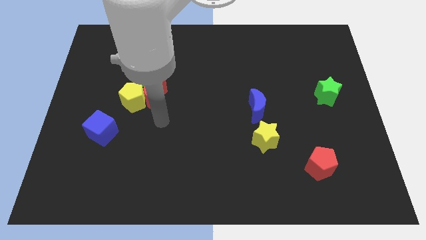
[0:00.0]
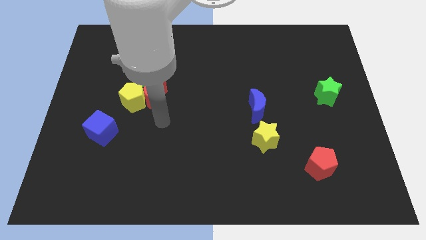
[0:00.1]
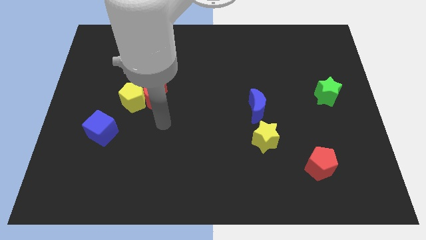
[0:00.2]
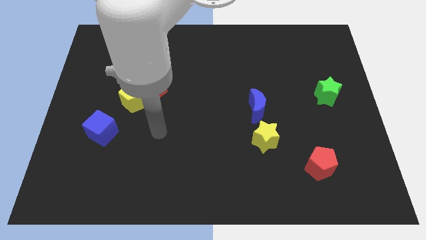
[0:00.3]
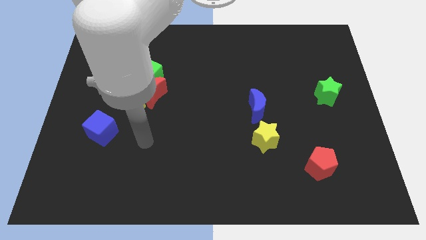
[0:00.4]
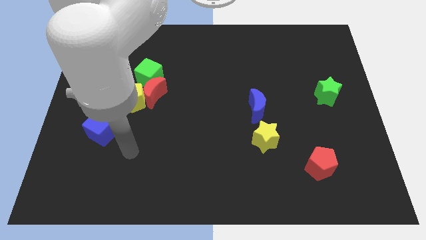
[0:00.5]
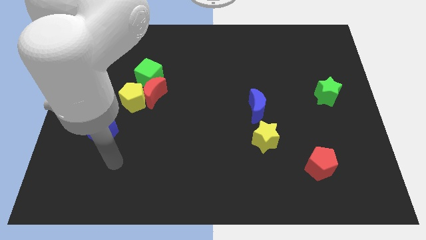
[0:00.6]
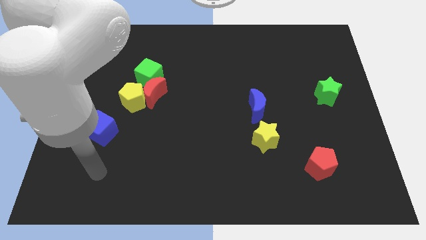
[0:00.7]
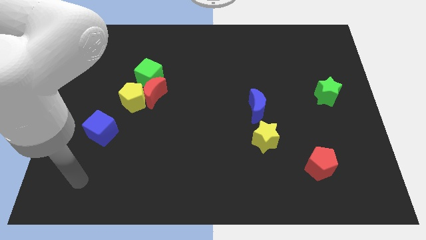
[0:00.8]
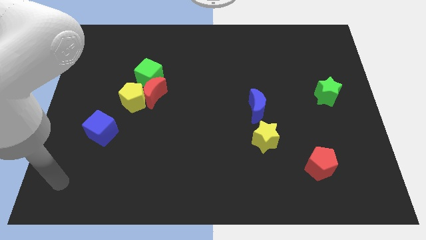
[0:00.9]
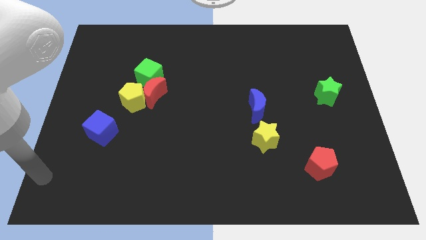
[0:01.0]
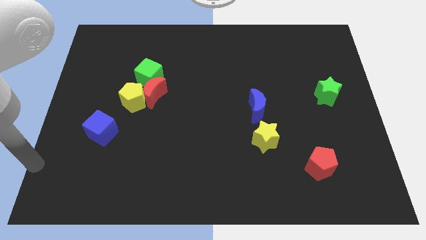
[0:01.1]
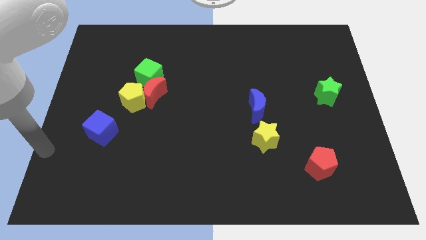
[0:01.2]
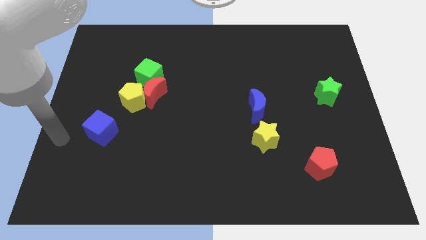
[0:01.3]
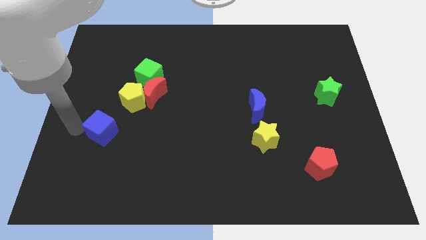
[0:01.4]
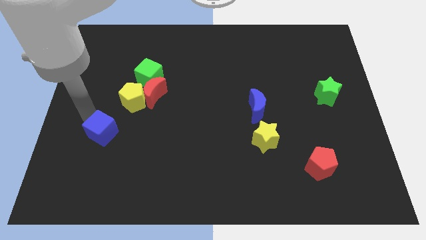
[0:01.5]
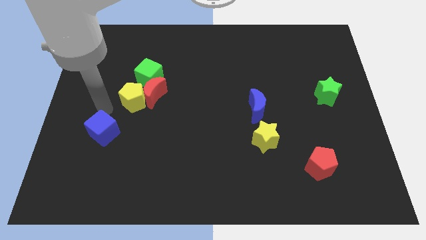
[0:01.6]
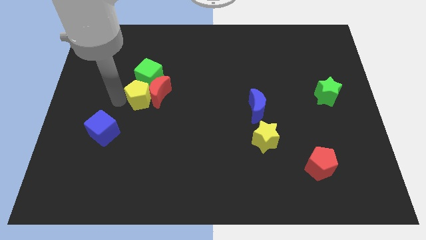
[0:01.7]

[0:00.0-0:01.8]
move your arm to the left of yellow pentagon

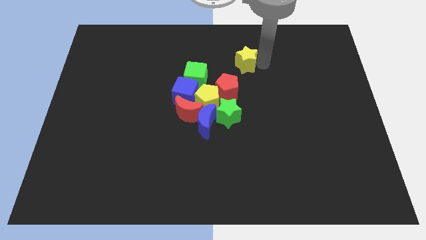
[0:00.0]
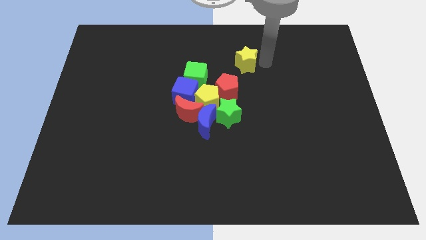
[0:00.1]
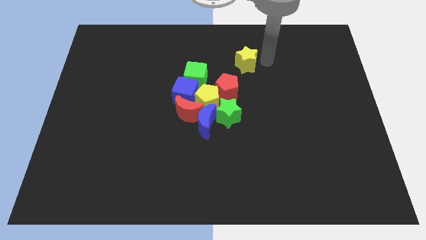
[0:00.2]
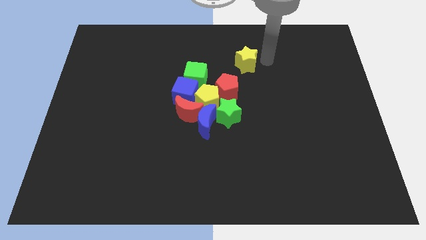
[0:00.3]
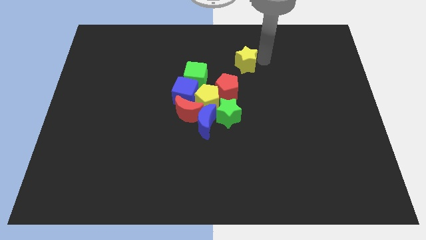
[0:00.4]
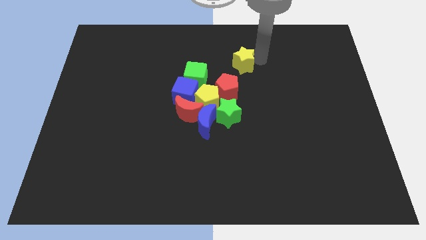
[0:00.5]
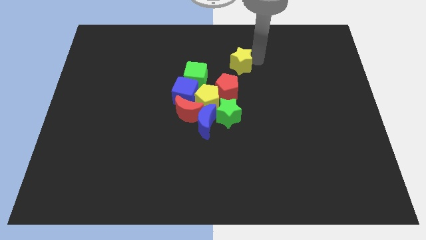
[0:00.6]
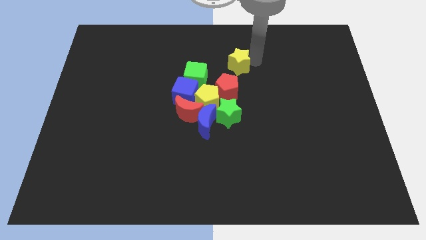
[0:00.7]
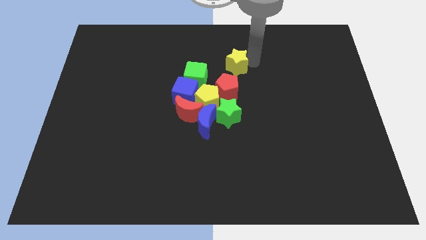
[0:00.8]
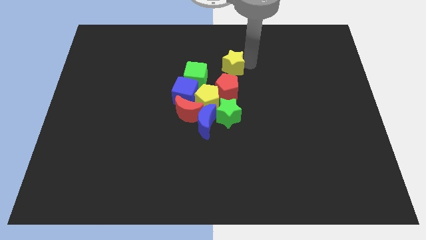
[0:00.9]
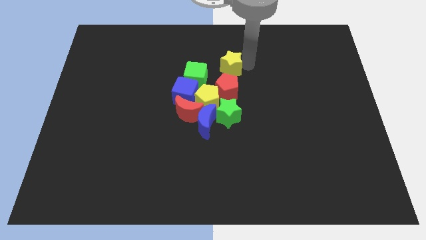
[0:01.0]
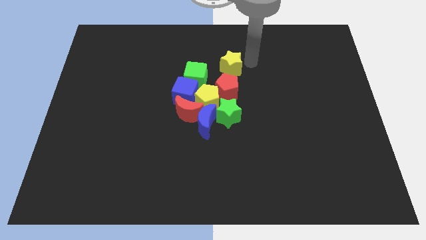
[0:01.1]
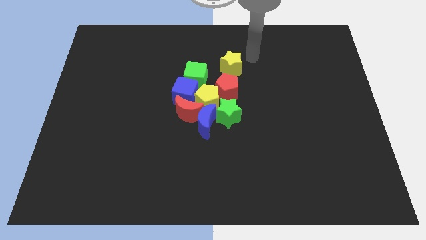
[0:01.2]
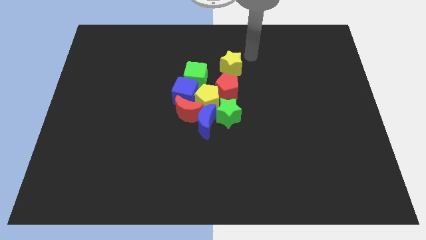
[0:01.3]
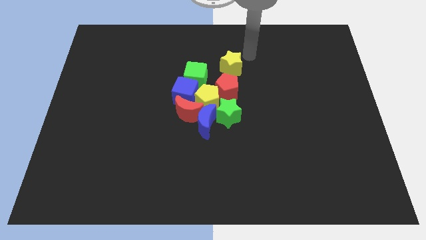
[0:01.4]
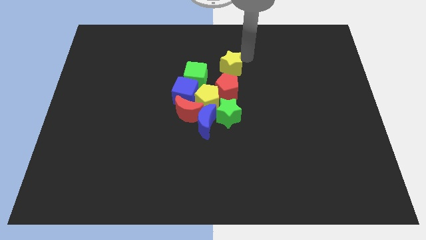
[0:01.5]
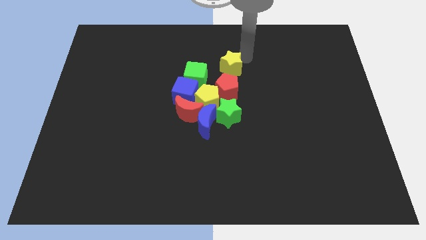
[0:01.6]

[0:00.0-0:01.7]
place the yellow star above the red pentagon

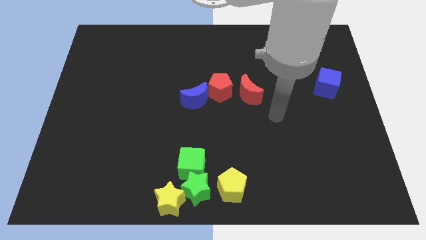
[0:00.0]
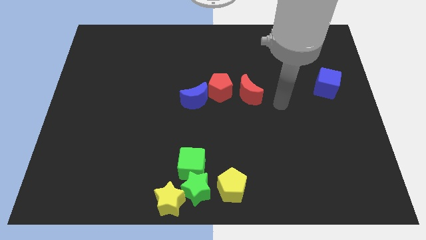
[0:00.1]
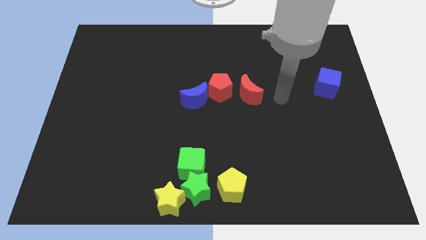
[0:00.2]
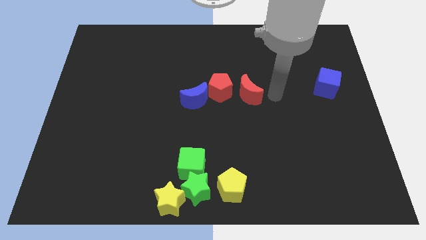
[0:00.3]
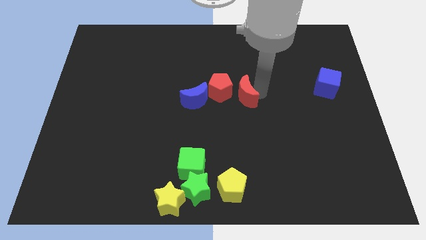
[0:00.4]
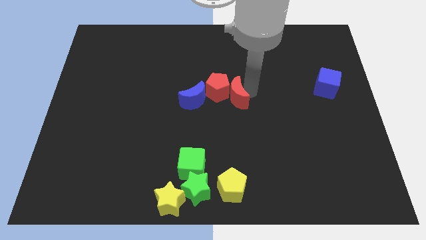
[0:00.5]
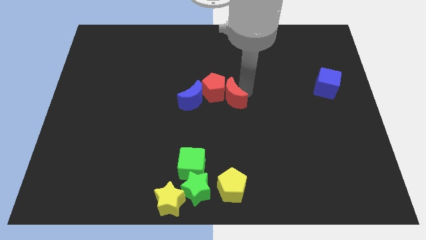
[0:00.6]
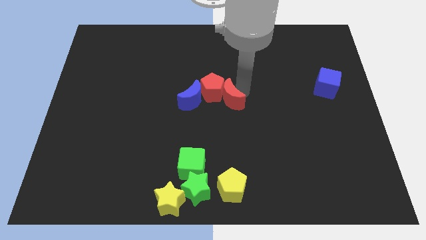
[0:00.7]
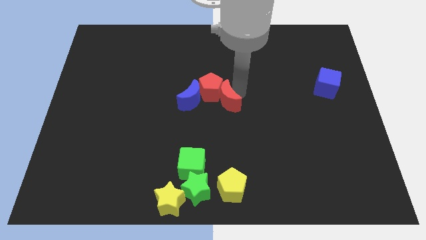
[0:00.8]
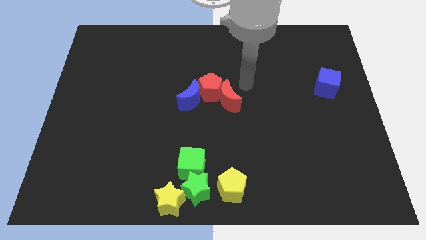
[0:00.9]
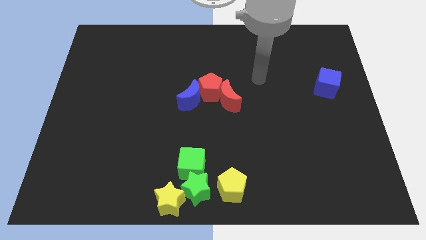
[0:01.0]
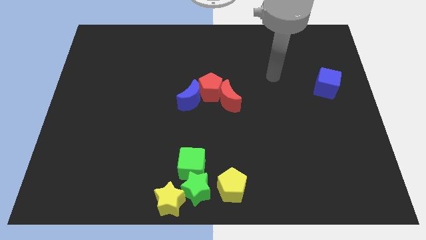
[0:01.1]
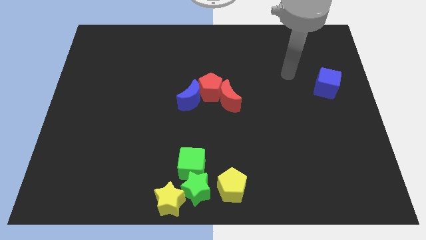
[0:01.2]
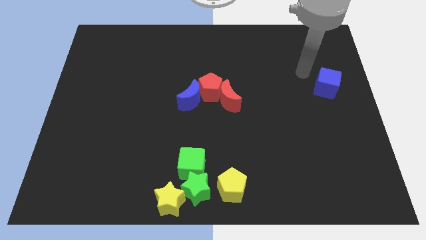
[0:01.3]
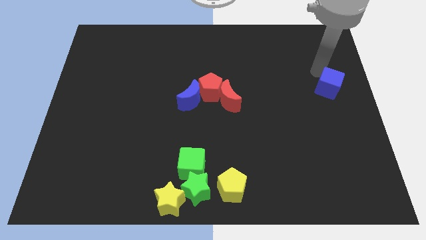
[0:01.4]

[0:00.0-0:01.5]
move the red crescent into the red pentagon on the center of the board

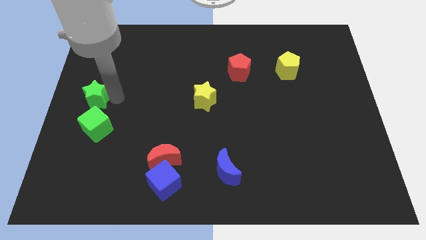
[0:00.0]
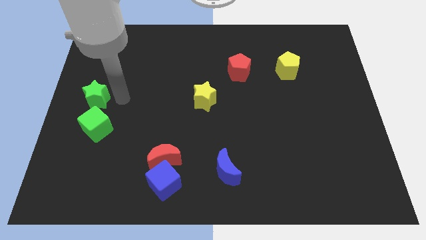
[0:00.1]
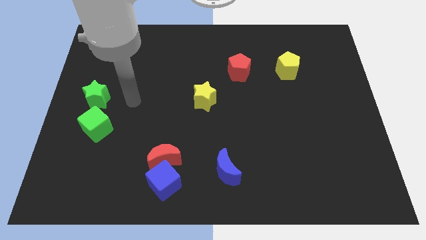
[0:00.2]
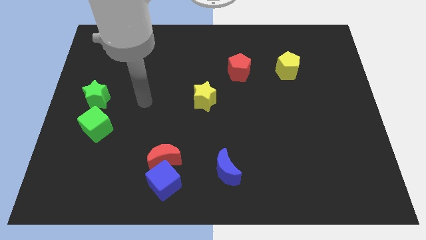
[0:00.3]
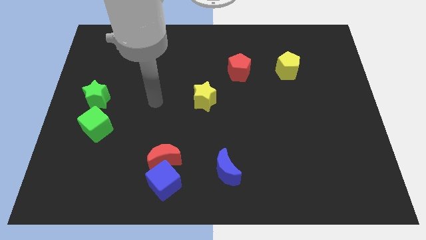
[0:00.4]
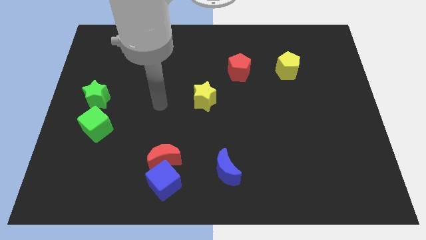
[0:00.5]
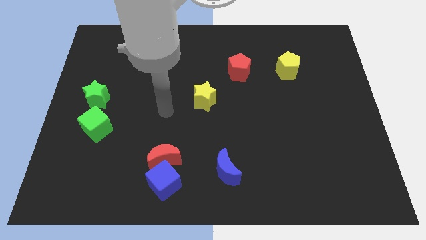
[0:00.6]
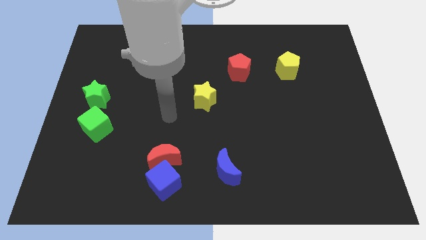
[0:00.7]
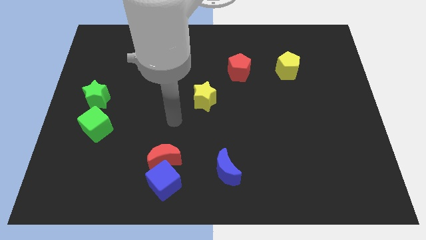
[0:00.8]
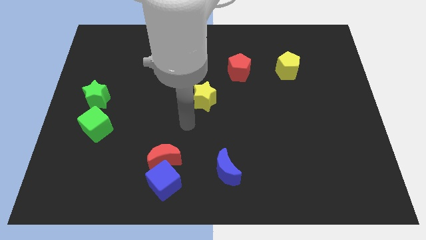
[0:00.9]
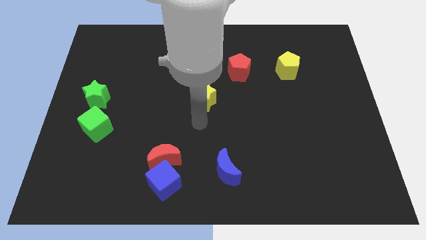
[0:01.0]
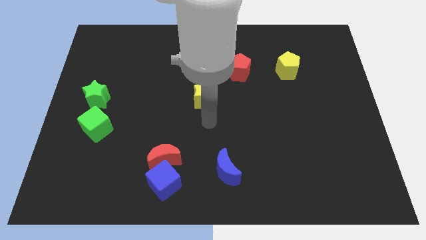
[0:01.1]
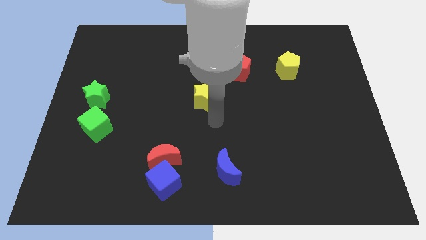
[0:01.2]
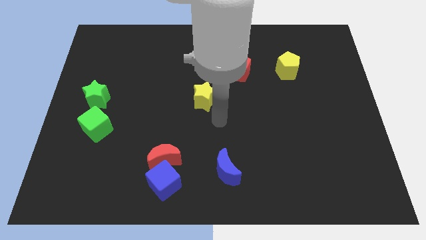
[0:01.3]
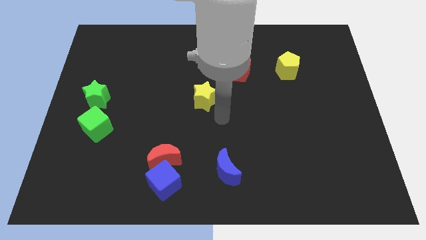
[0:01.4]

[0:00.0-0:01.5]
move your arm towards the center of the board

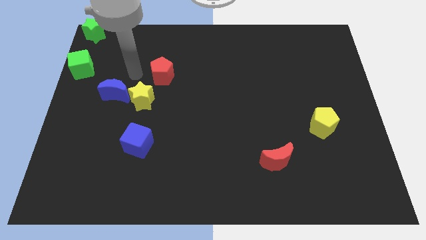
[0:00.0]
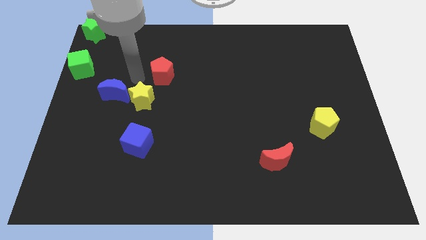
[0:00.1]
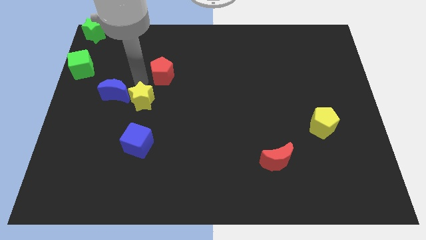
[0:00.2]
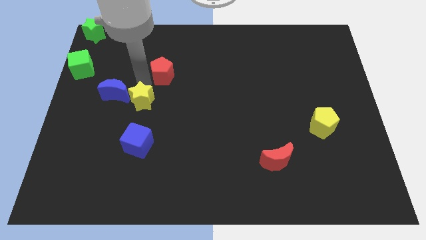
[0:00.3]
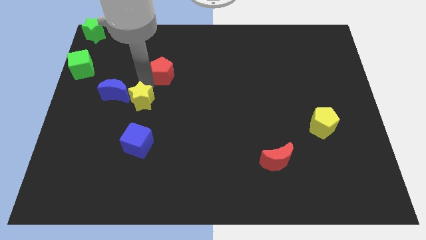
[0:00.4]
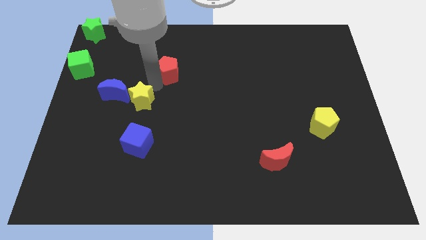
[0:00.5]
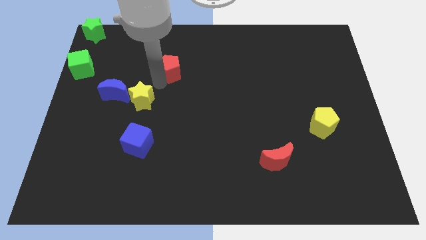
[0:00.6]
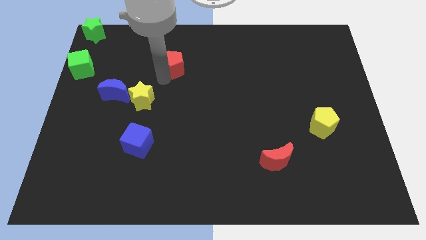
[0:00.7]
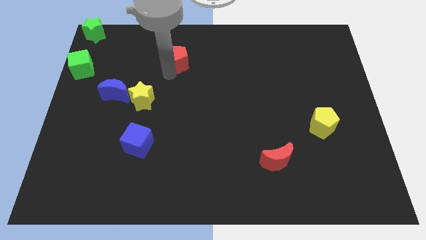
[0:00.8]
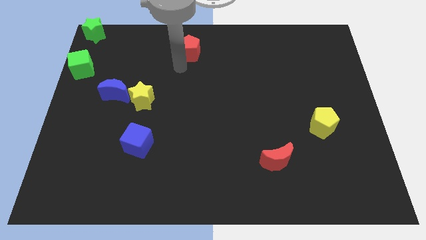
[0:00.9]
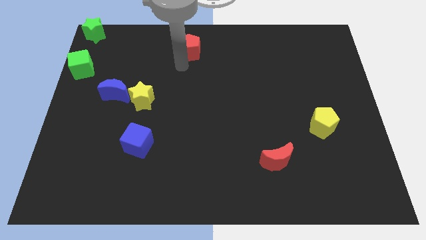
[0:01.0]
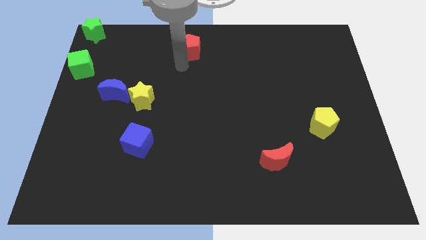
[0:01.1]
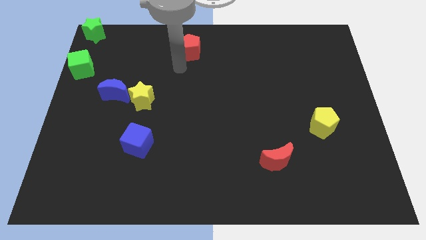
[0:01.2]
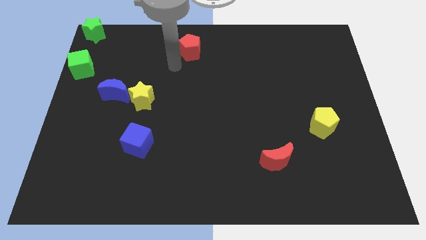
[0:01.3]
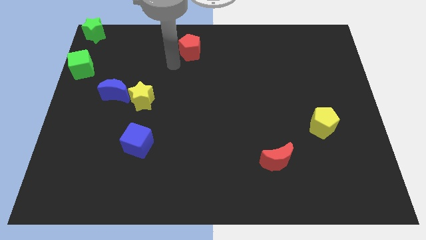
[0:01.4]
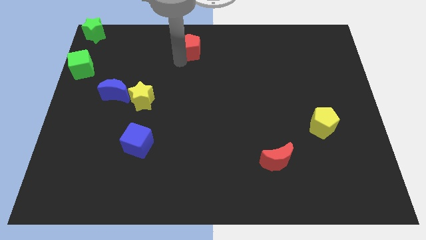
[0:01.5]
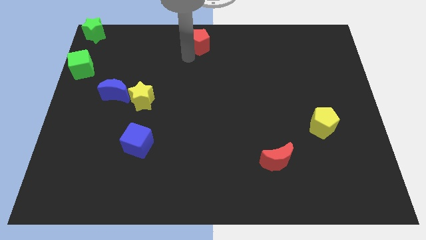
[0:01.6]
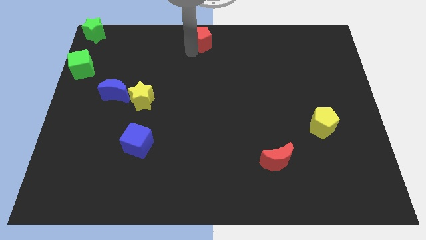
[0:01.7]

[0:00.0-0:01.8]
place the red pentagon at the top center

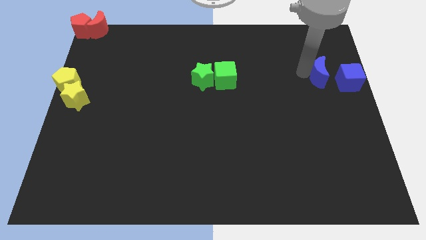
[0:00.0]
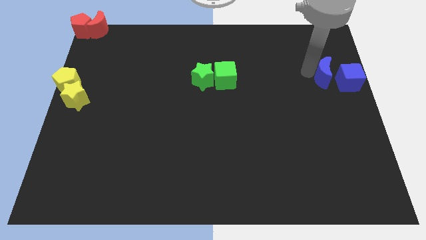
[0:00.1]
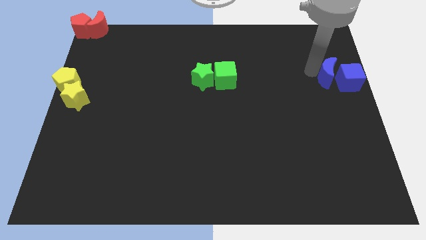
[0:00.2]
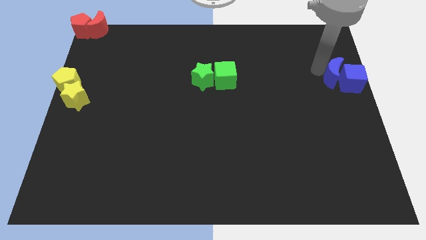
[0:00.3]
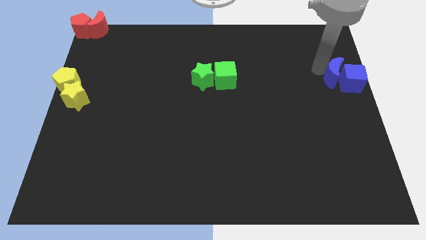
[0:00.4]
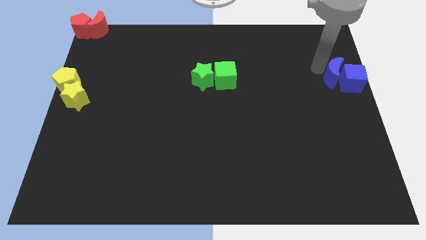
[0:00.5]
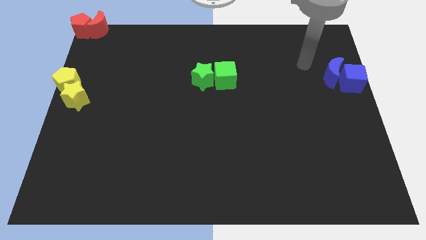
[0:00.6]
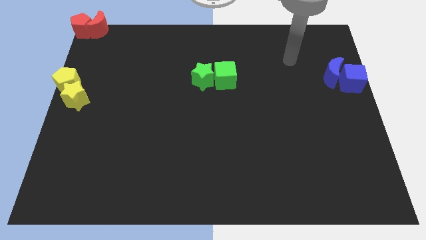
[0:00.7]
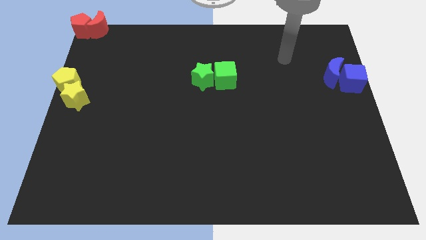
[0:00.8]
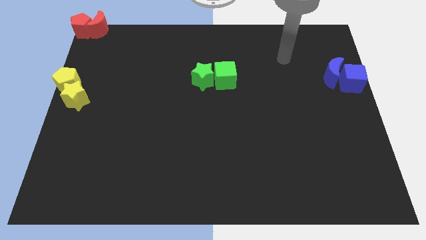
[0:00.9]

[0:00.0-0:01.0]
push the blue crescent to the right center of the board
